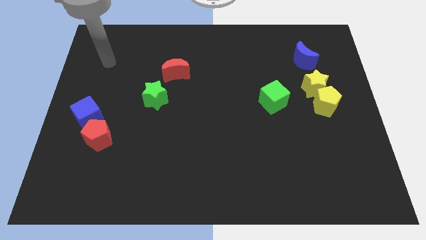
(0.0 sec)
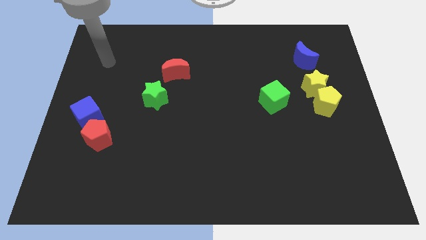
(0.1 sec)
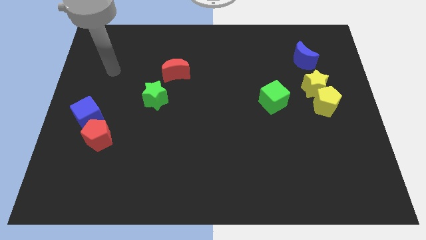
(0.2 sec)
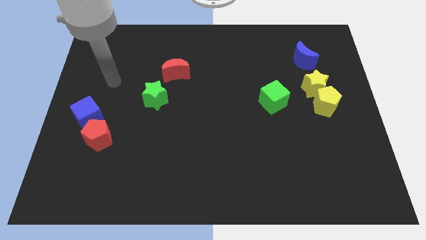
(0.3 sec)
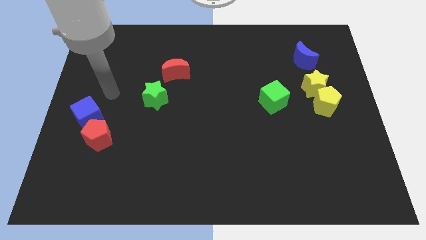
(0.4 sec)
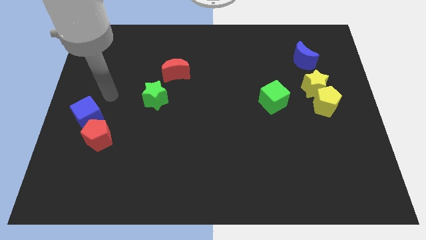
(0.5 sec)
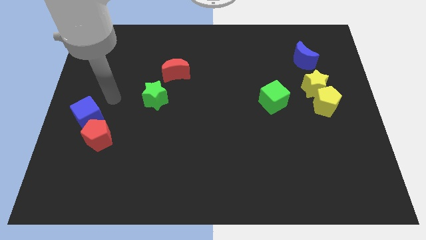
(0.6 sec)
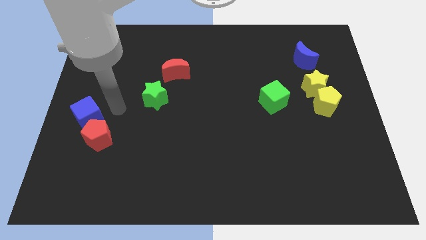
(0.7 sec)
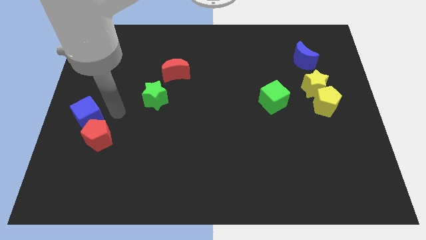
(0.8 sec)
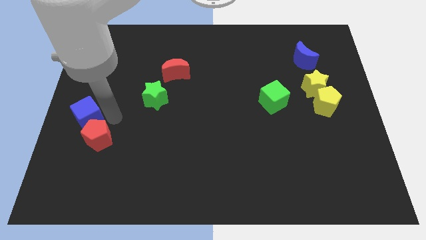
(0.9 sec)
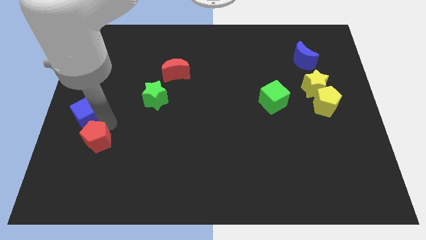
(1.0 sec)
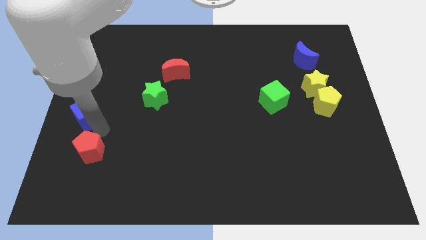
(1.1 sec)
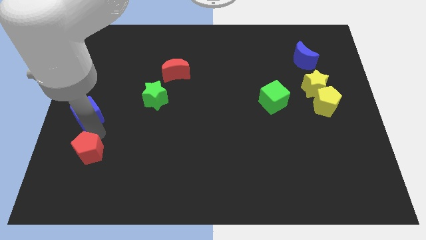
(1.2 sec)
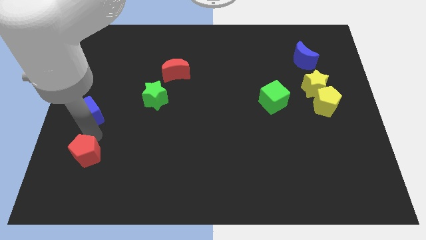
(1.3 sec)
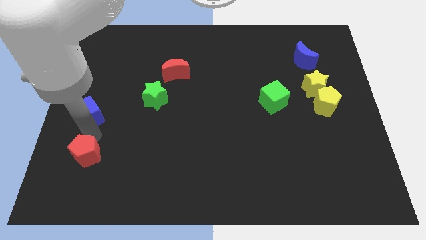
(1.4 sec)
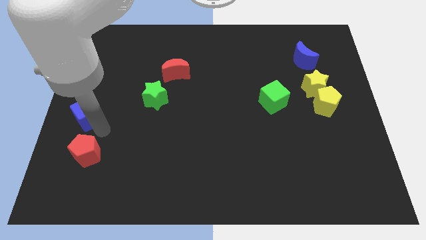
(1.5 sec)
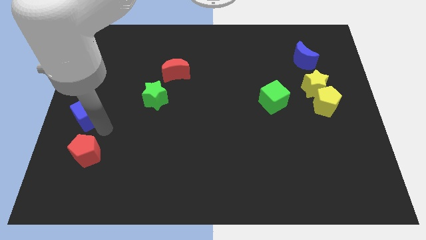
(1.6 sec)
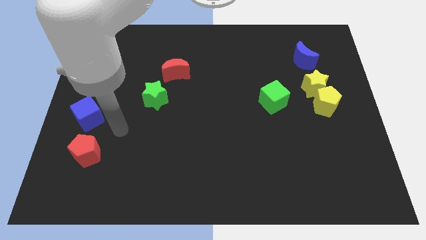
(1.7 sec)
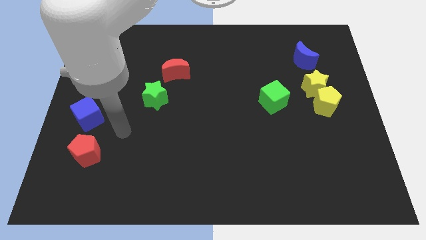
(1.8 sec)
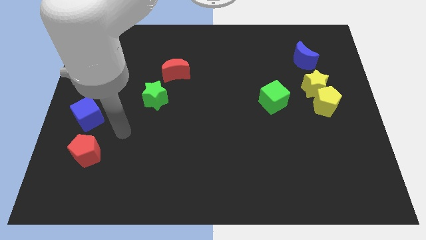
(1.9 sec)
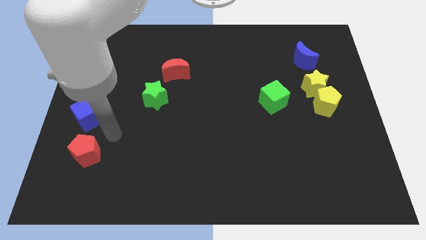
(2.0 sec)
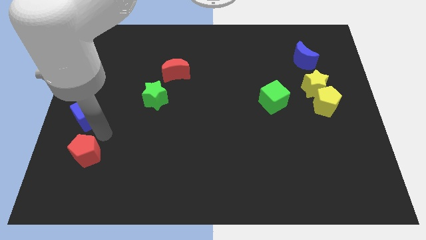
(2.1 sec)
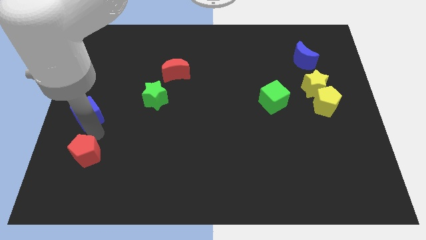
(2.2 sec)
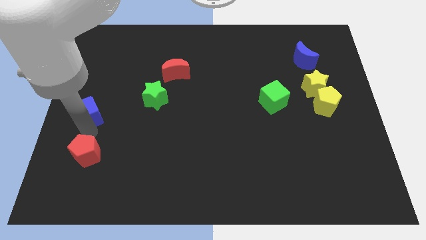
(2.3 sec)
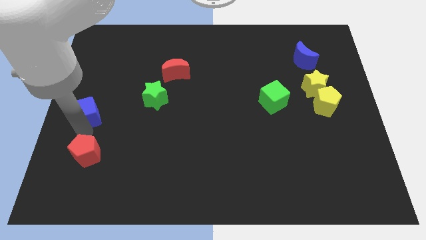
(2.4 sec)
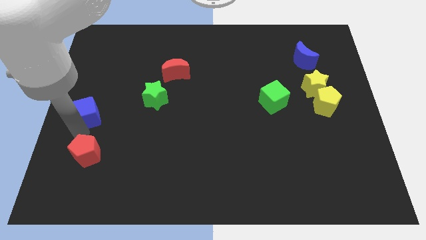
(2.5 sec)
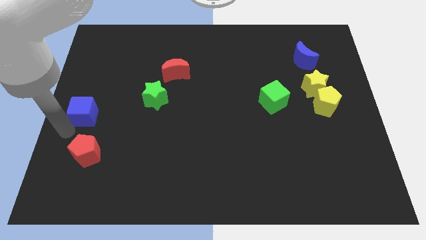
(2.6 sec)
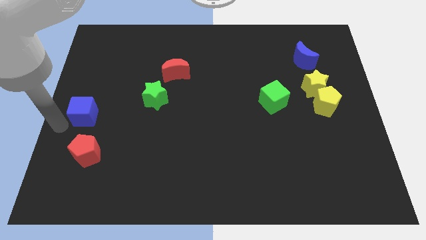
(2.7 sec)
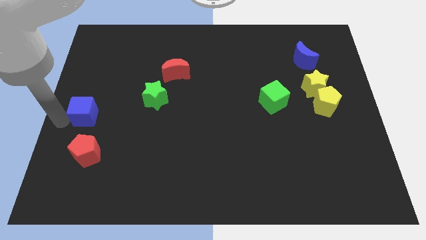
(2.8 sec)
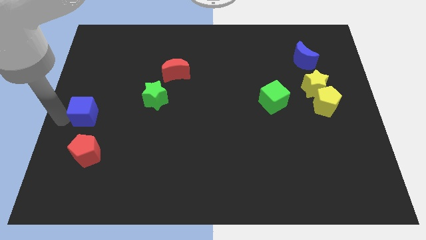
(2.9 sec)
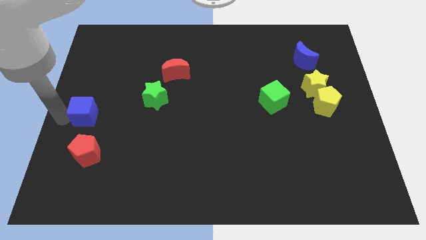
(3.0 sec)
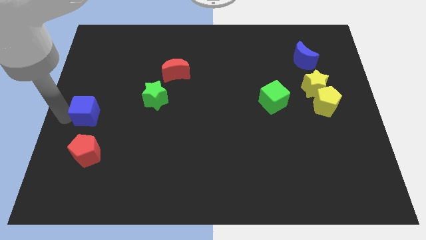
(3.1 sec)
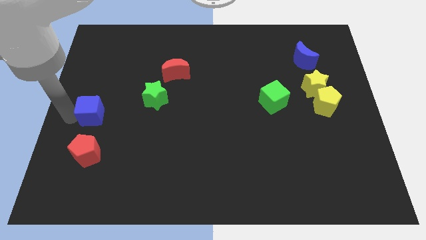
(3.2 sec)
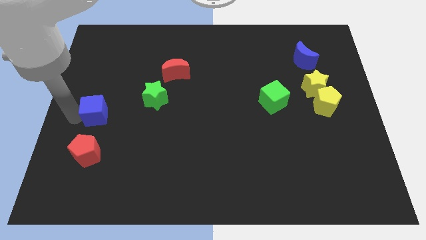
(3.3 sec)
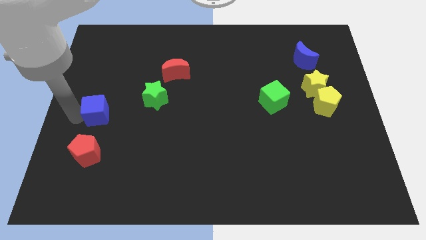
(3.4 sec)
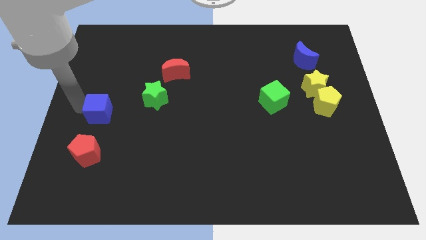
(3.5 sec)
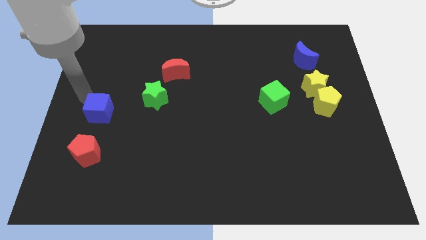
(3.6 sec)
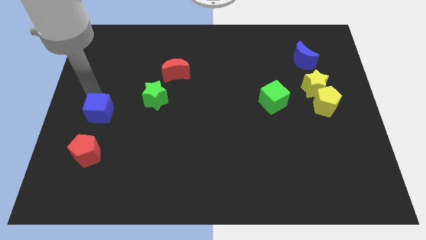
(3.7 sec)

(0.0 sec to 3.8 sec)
separate the blue cube and red pentagon

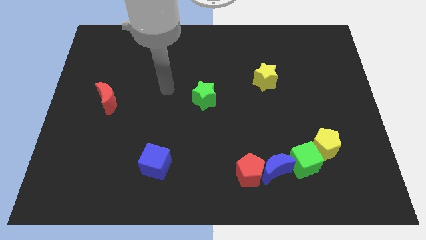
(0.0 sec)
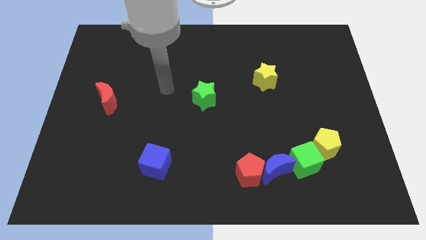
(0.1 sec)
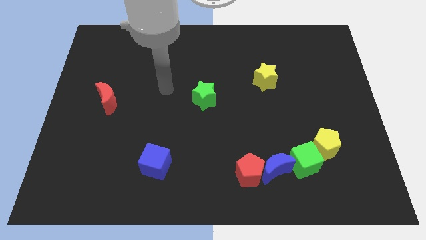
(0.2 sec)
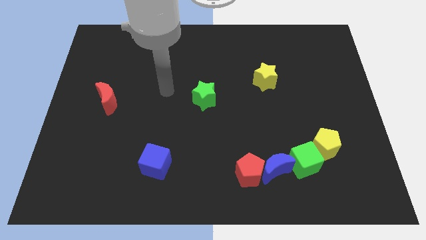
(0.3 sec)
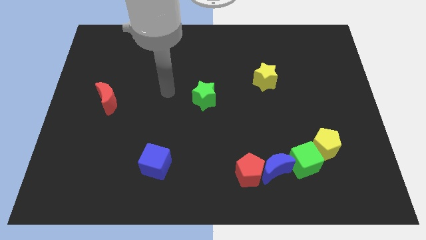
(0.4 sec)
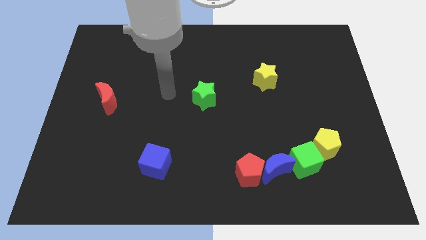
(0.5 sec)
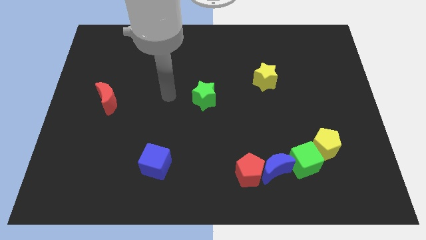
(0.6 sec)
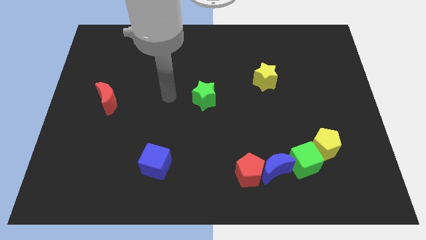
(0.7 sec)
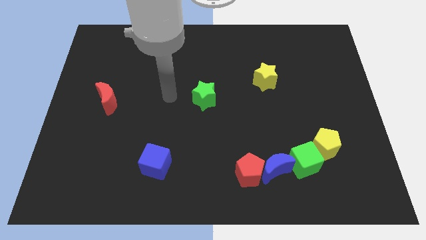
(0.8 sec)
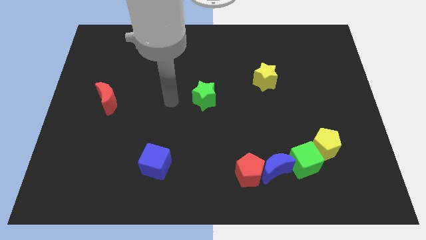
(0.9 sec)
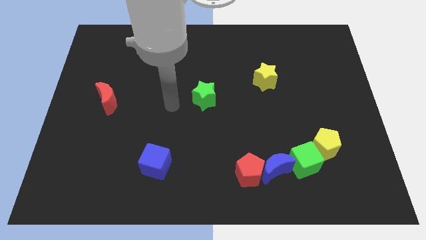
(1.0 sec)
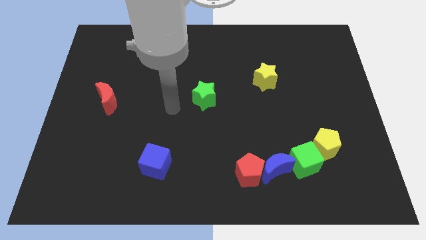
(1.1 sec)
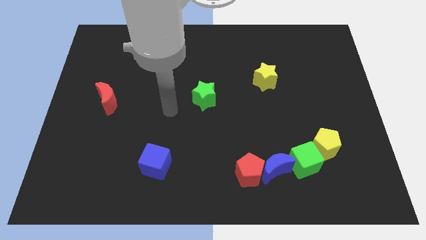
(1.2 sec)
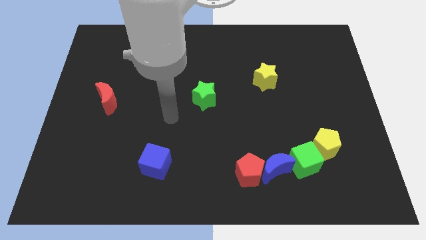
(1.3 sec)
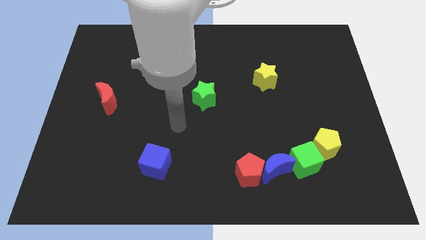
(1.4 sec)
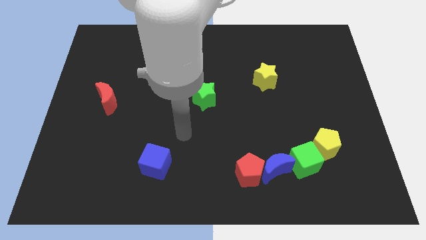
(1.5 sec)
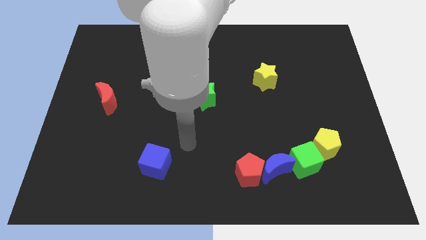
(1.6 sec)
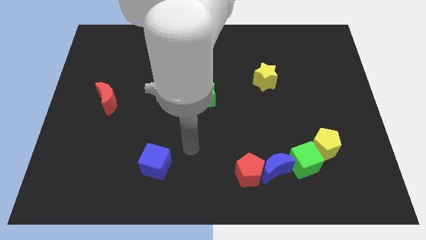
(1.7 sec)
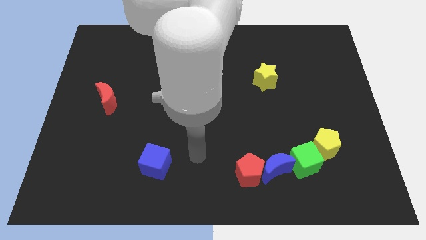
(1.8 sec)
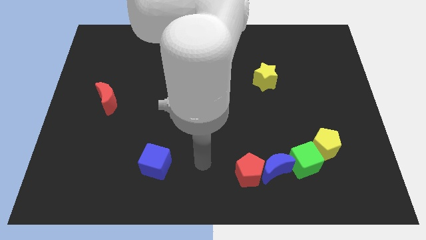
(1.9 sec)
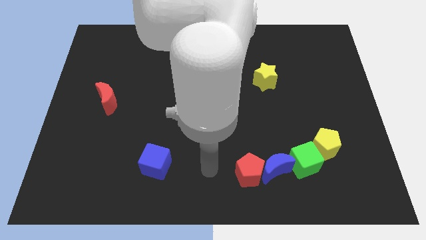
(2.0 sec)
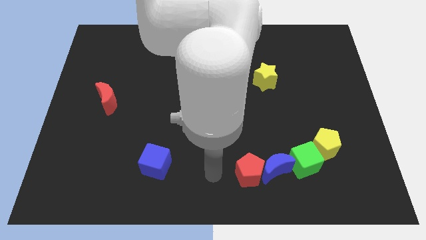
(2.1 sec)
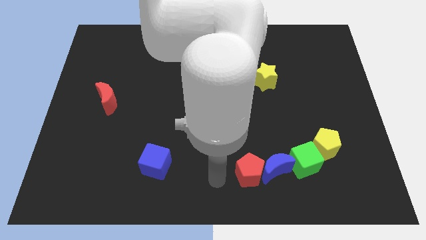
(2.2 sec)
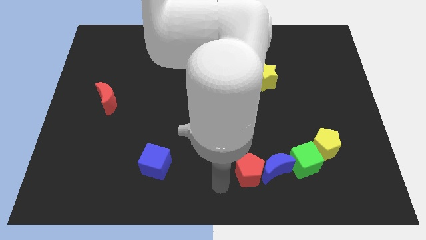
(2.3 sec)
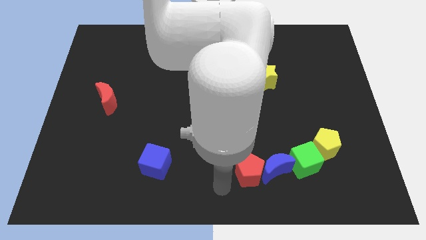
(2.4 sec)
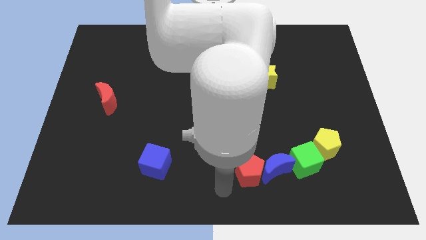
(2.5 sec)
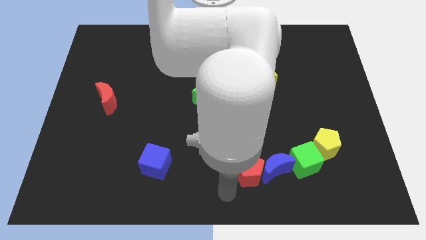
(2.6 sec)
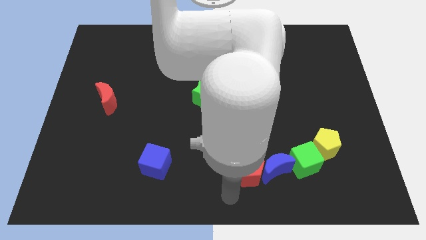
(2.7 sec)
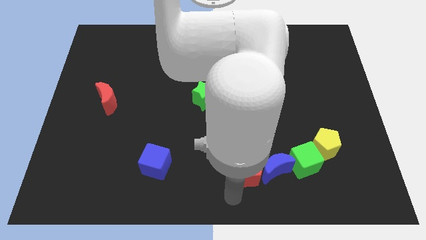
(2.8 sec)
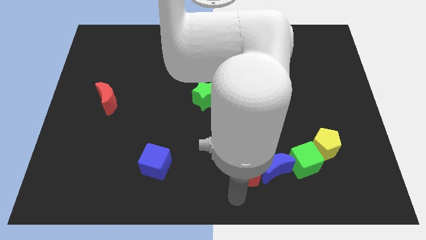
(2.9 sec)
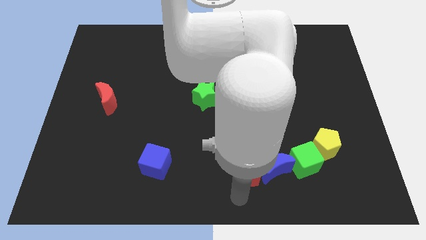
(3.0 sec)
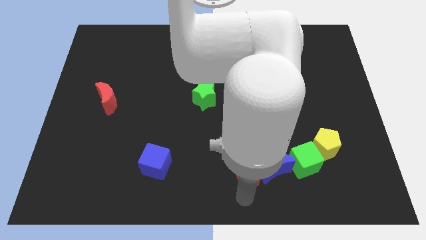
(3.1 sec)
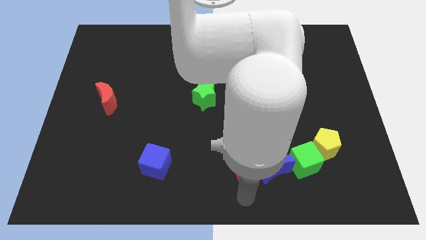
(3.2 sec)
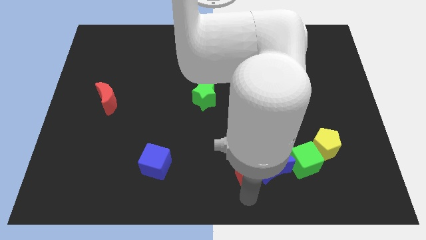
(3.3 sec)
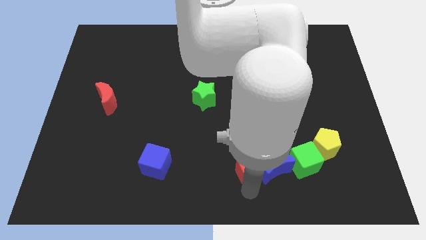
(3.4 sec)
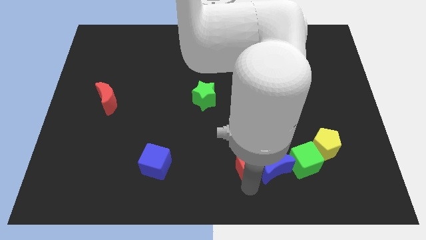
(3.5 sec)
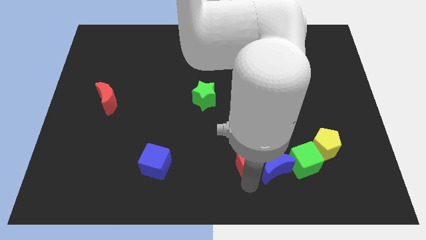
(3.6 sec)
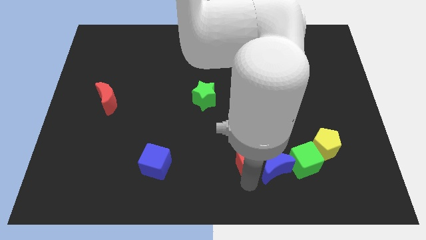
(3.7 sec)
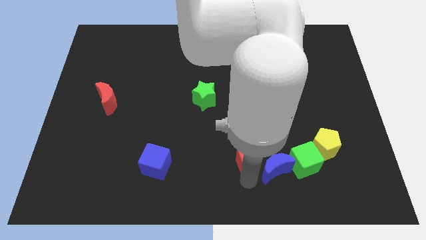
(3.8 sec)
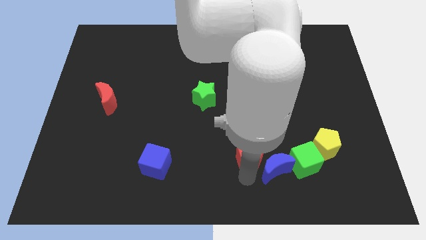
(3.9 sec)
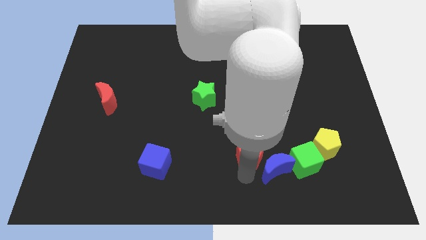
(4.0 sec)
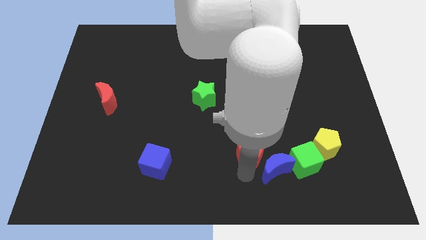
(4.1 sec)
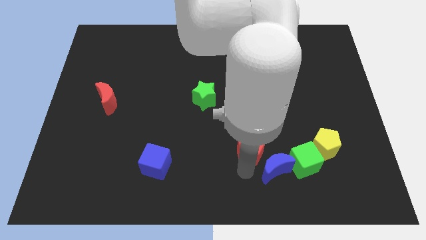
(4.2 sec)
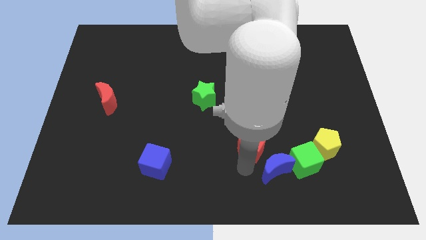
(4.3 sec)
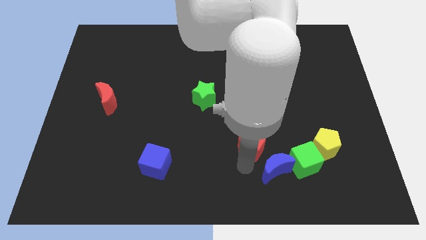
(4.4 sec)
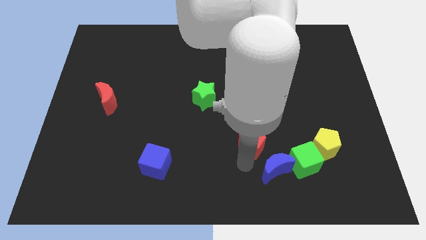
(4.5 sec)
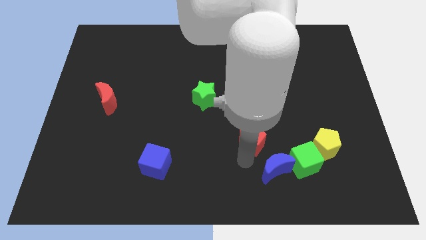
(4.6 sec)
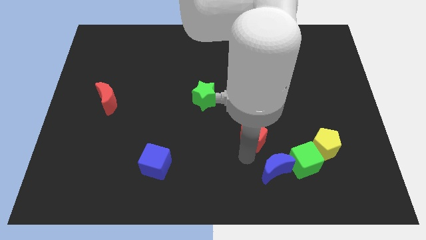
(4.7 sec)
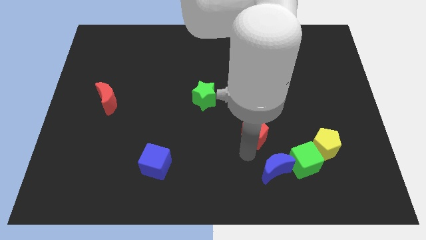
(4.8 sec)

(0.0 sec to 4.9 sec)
separate the red pentagon and blue moon
